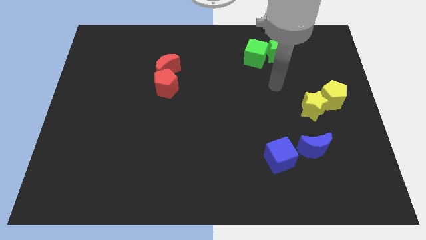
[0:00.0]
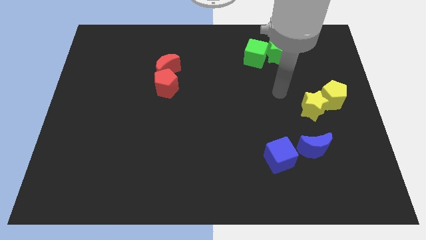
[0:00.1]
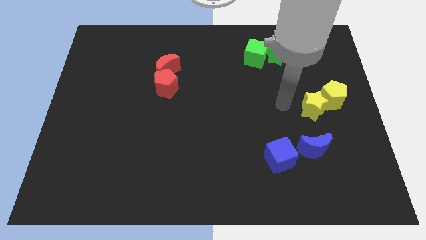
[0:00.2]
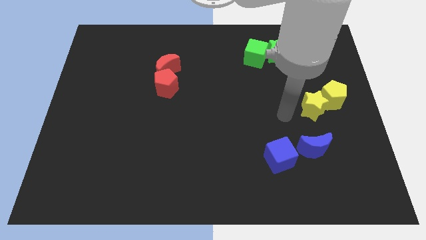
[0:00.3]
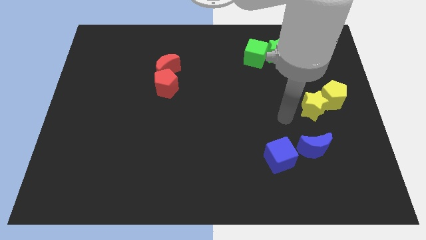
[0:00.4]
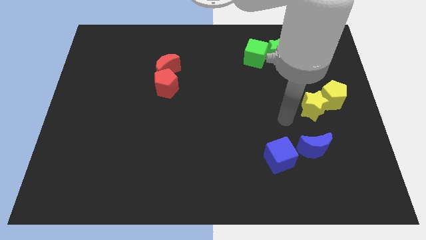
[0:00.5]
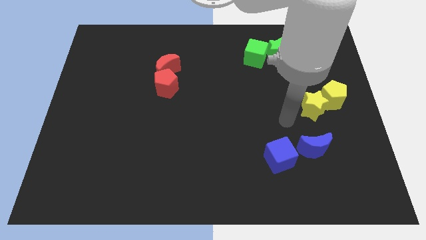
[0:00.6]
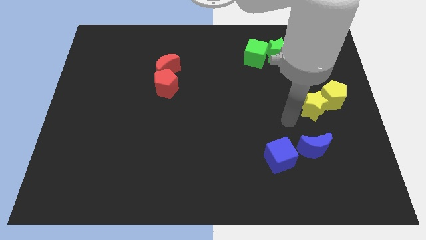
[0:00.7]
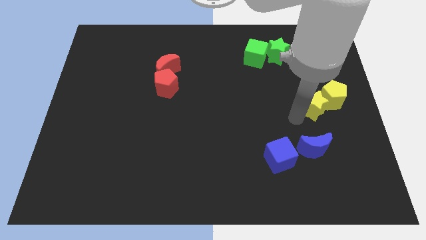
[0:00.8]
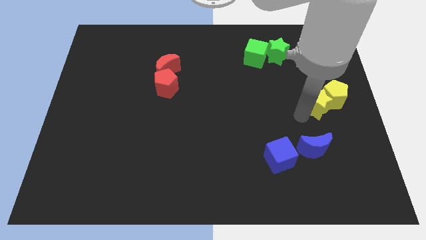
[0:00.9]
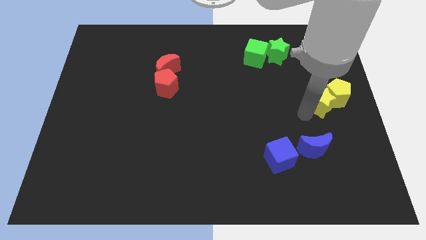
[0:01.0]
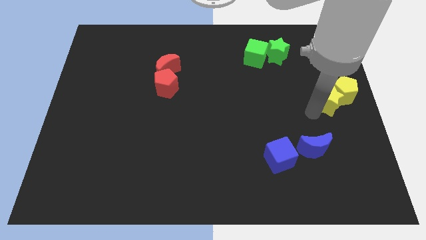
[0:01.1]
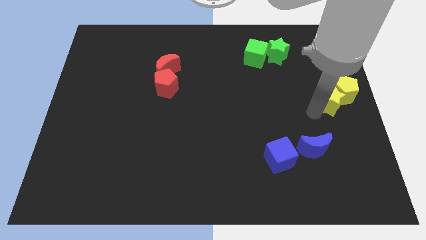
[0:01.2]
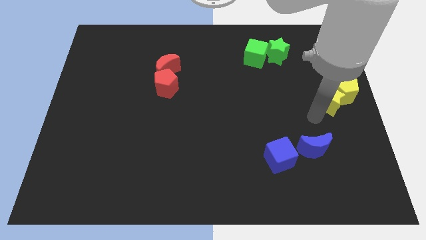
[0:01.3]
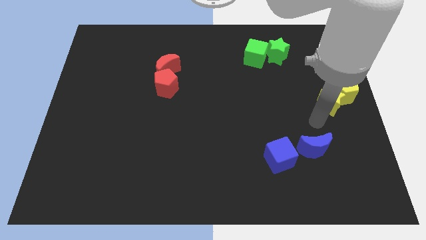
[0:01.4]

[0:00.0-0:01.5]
move the yellow star with yellow pentagon to the center right

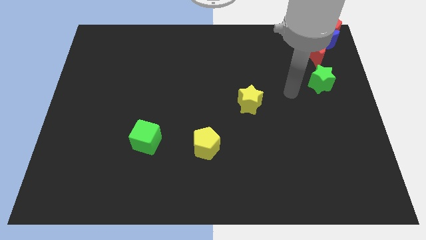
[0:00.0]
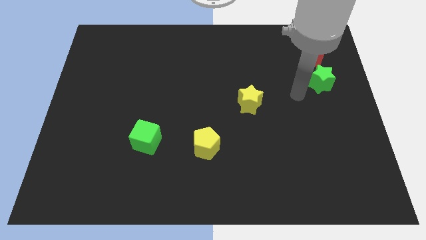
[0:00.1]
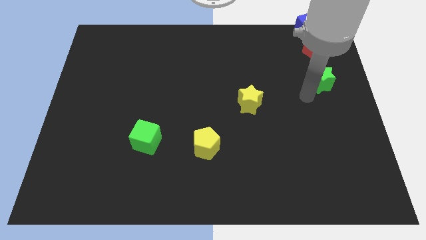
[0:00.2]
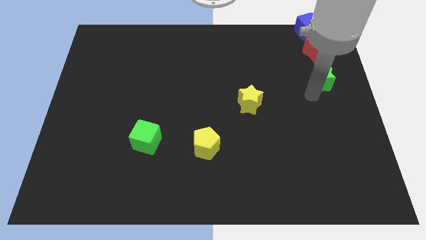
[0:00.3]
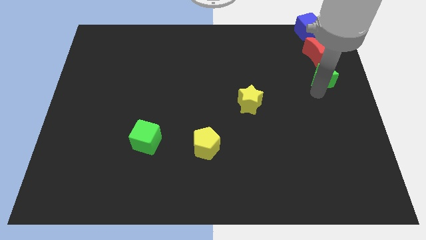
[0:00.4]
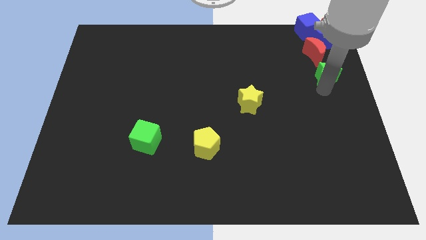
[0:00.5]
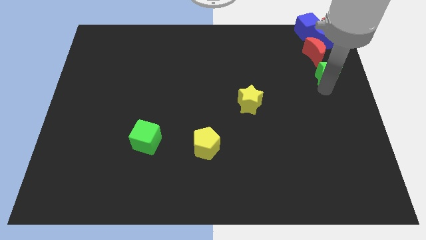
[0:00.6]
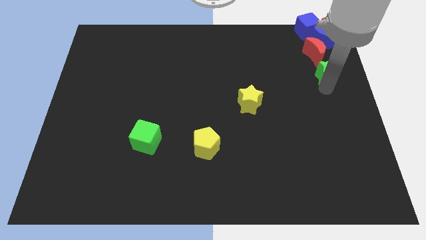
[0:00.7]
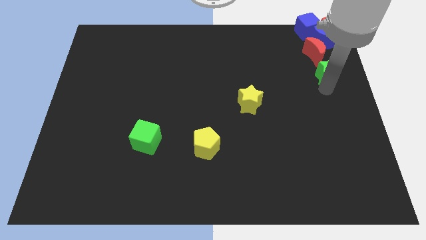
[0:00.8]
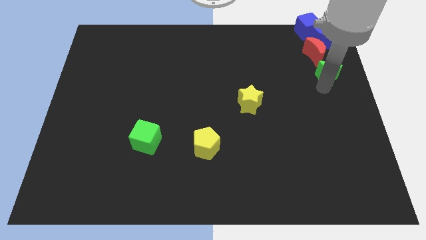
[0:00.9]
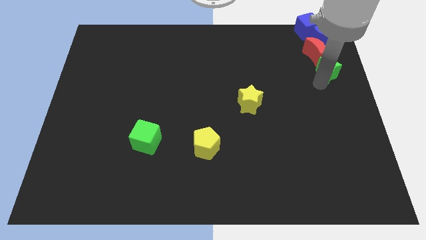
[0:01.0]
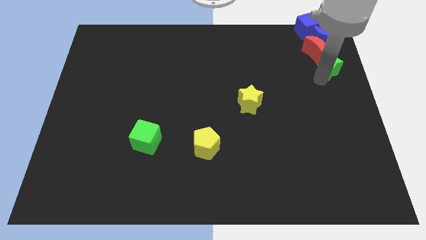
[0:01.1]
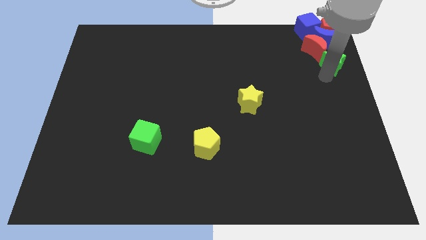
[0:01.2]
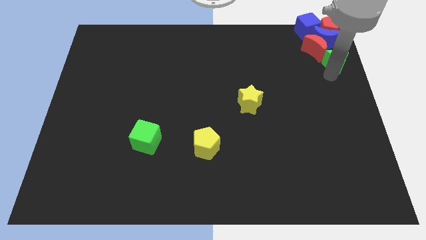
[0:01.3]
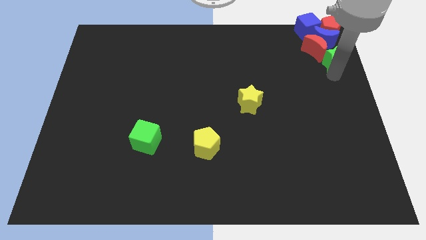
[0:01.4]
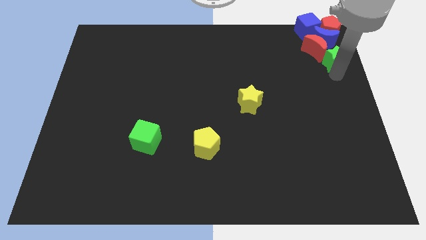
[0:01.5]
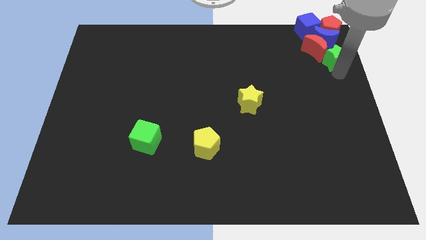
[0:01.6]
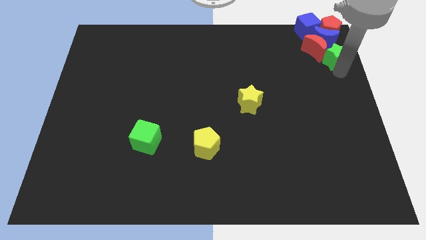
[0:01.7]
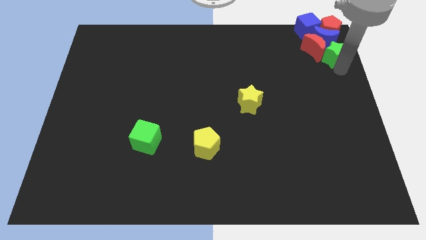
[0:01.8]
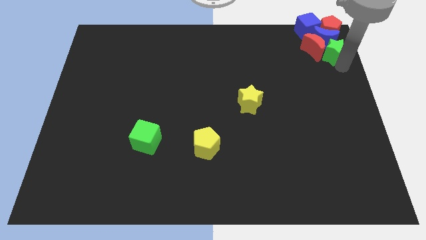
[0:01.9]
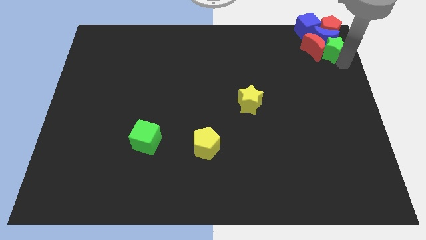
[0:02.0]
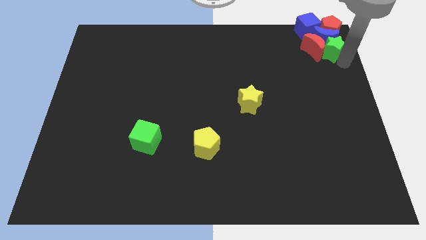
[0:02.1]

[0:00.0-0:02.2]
move the green star to the right of the red crescent

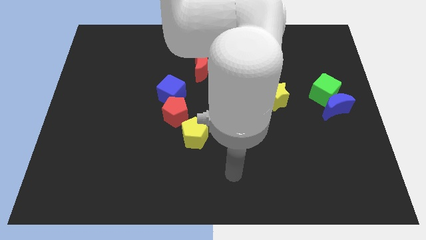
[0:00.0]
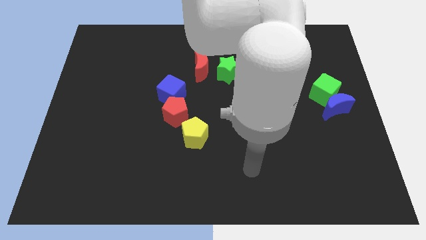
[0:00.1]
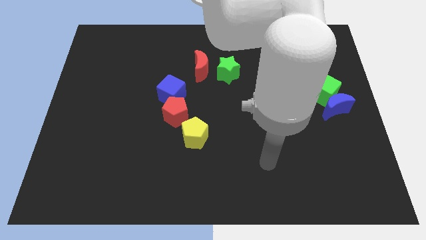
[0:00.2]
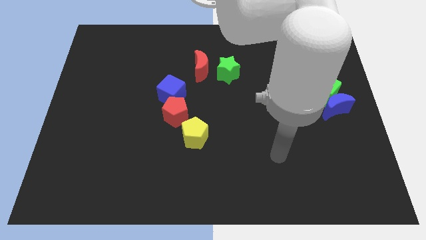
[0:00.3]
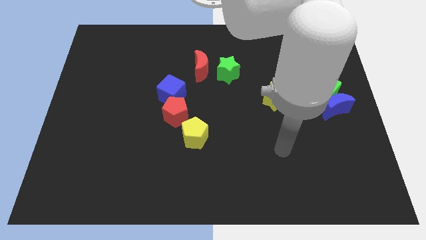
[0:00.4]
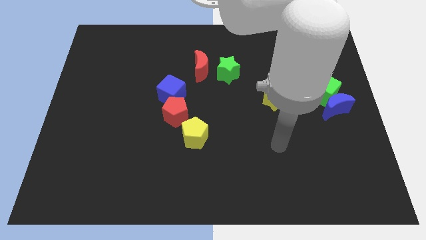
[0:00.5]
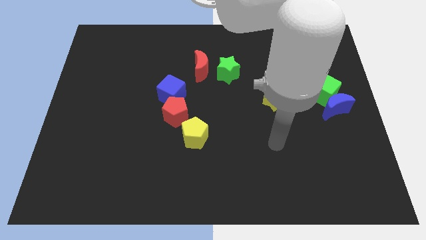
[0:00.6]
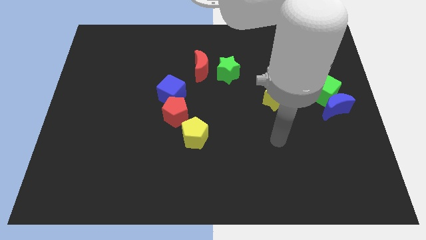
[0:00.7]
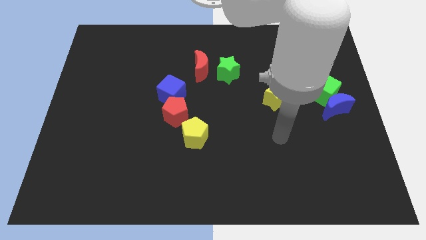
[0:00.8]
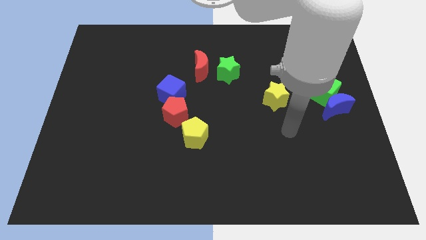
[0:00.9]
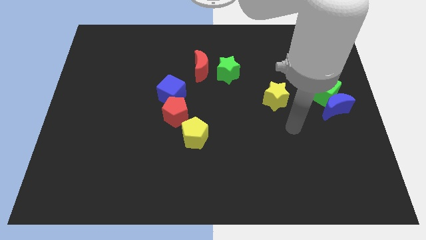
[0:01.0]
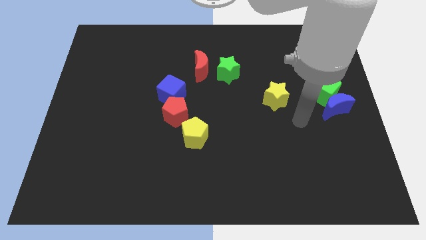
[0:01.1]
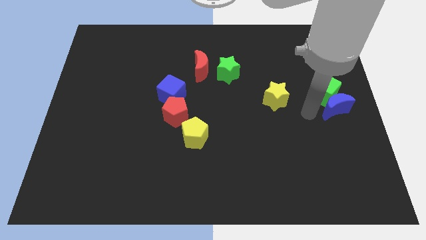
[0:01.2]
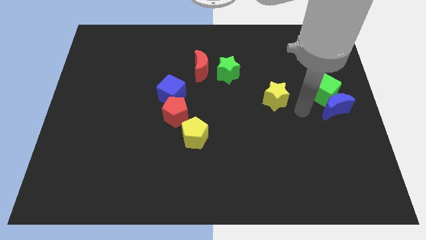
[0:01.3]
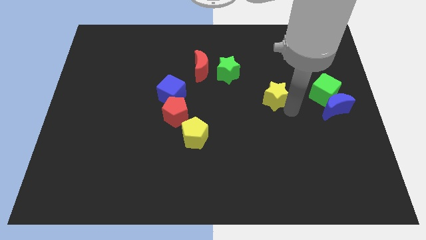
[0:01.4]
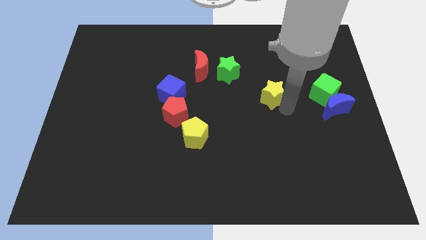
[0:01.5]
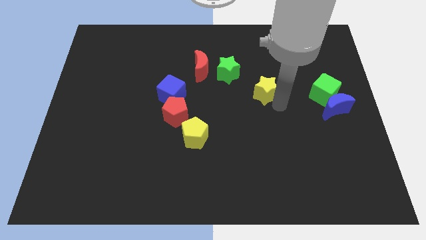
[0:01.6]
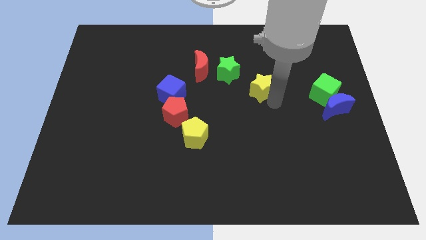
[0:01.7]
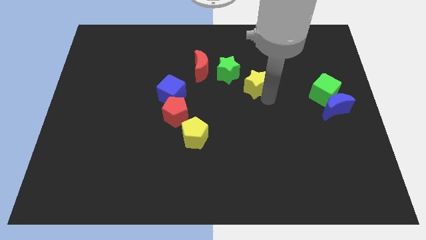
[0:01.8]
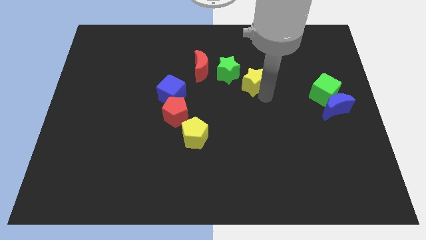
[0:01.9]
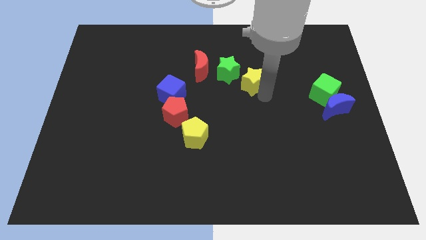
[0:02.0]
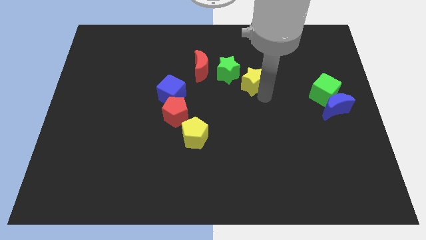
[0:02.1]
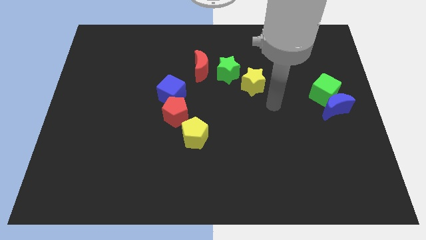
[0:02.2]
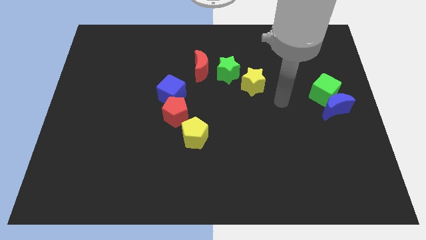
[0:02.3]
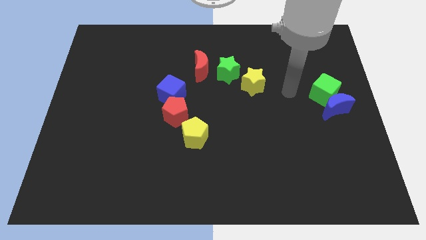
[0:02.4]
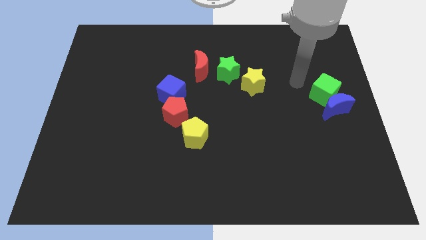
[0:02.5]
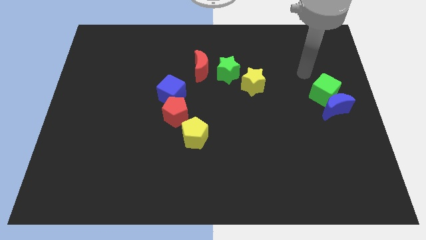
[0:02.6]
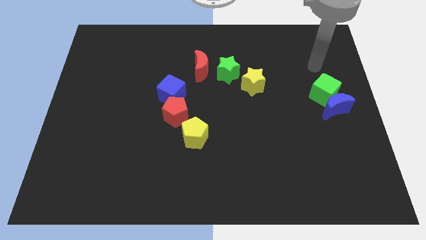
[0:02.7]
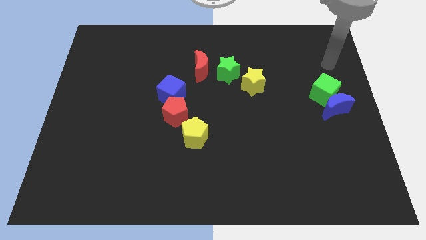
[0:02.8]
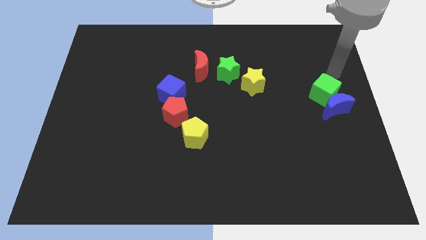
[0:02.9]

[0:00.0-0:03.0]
push the yellow star towards the right corner of the green star

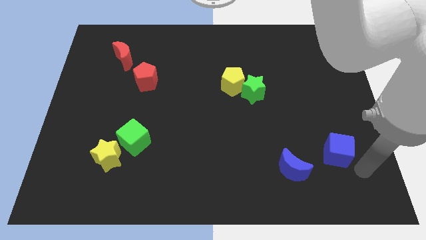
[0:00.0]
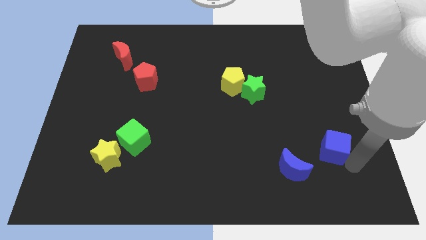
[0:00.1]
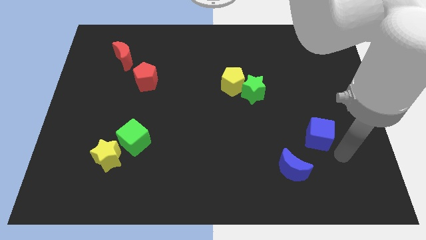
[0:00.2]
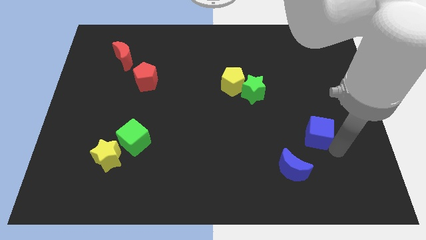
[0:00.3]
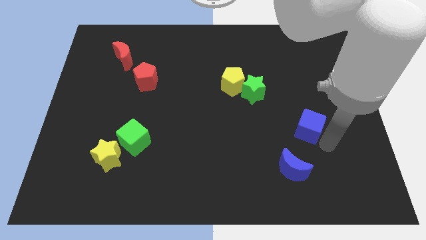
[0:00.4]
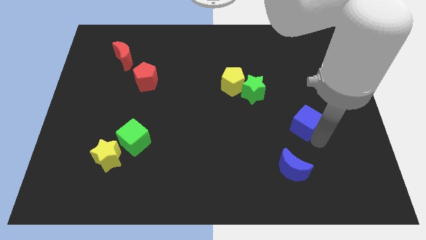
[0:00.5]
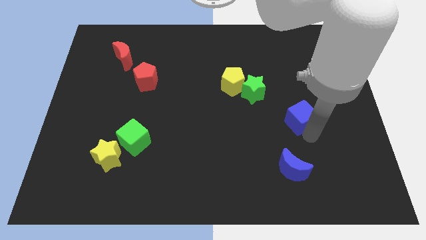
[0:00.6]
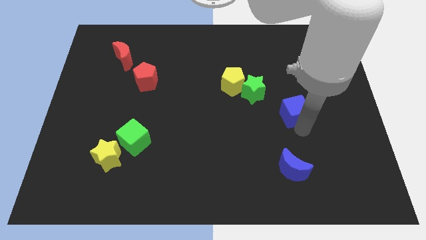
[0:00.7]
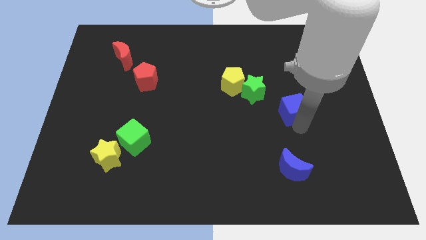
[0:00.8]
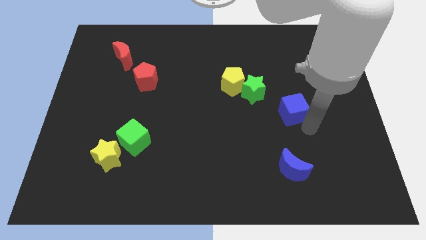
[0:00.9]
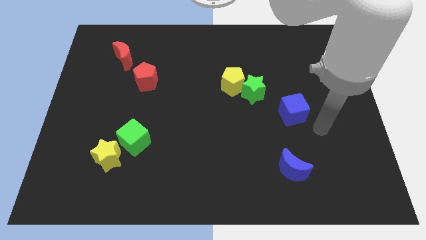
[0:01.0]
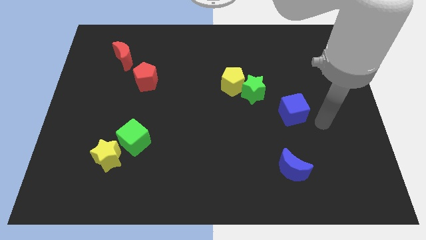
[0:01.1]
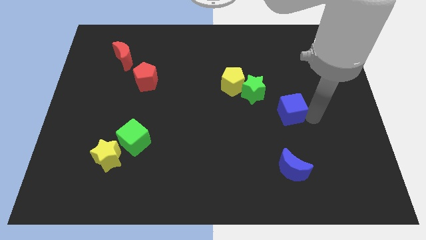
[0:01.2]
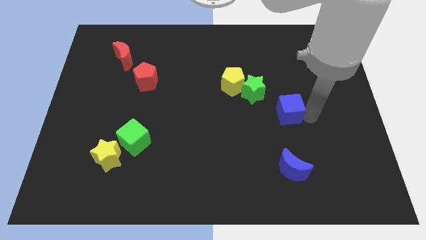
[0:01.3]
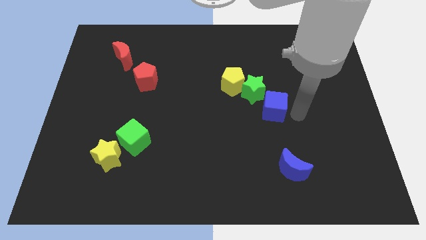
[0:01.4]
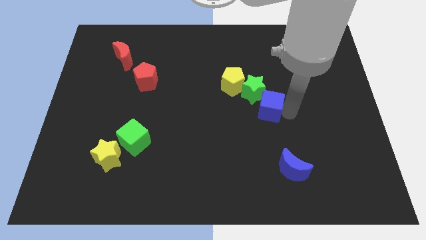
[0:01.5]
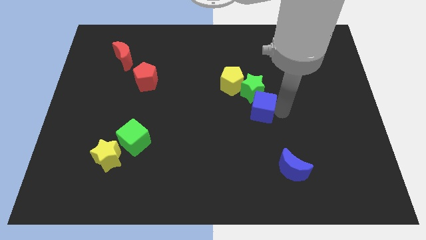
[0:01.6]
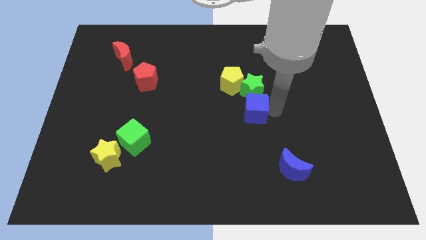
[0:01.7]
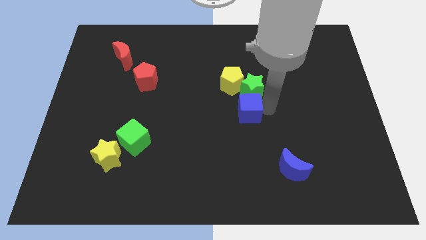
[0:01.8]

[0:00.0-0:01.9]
move blue cube below the green star

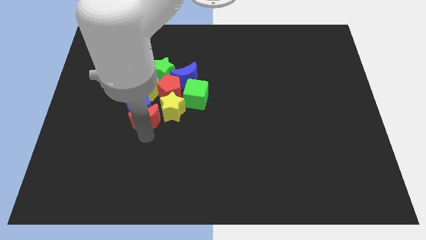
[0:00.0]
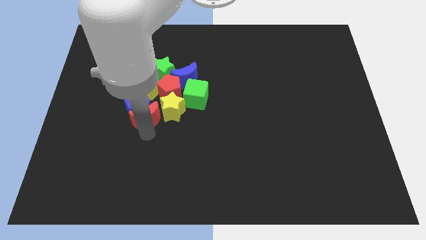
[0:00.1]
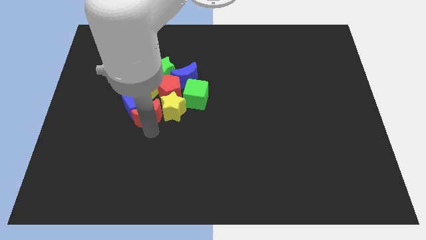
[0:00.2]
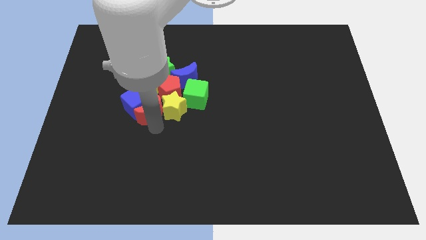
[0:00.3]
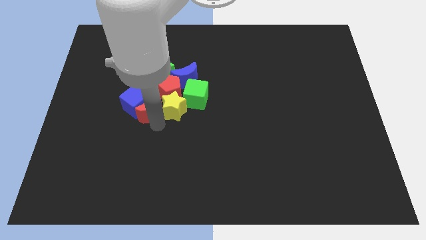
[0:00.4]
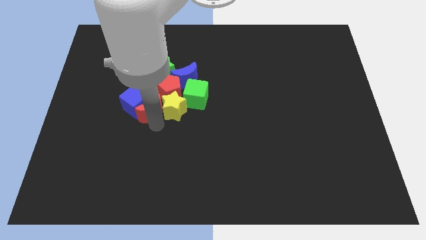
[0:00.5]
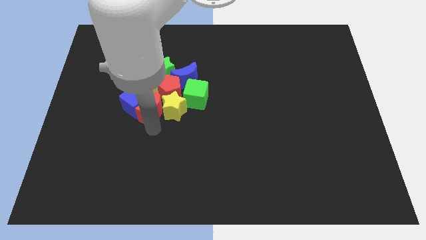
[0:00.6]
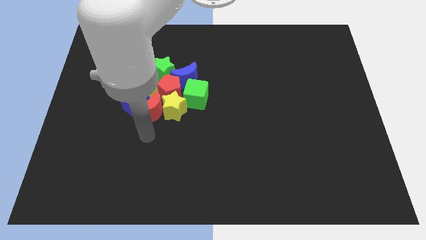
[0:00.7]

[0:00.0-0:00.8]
move the red crescent left to the yellow star
